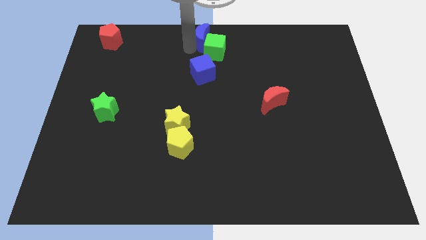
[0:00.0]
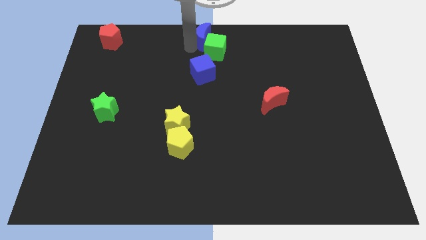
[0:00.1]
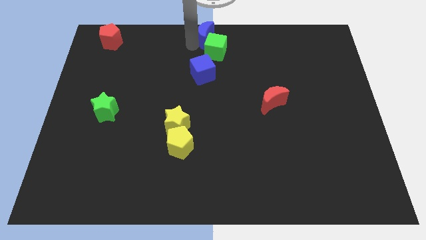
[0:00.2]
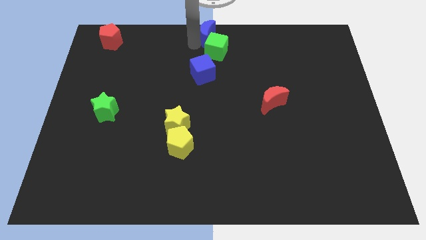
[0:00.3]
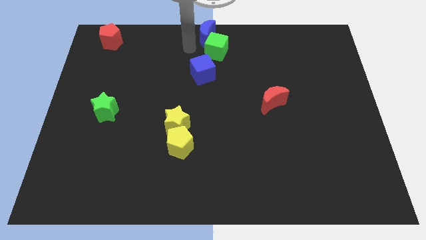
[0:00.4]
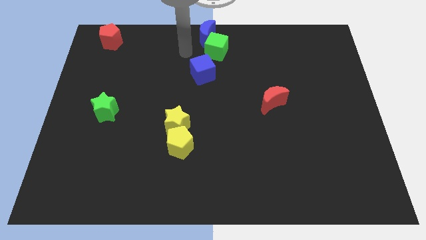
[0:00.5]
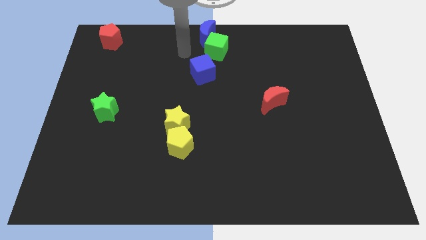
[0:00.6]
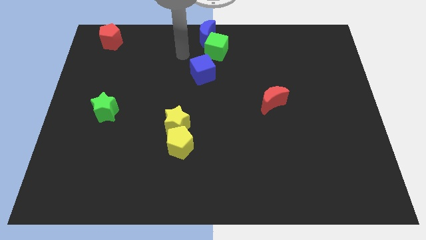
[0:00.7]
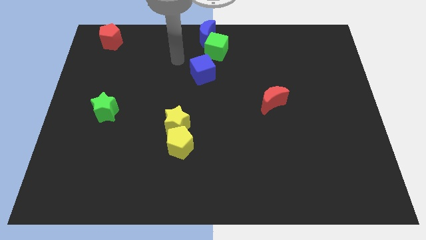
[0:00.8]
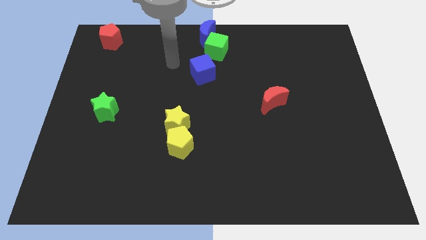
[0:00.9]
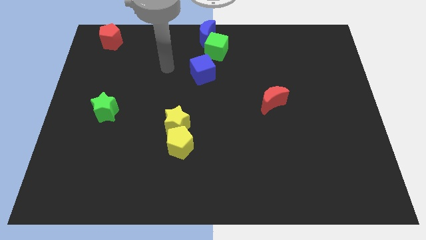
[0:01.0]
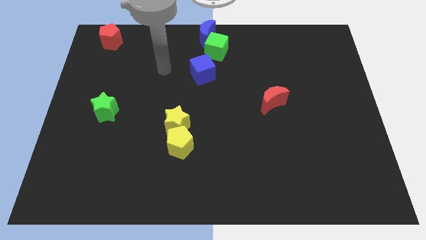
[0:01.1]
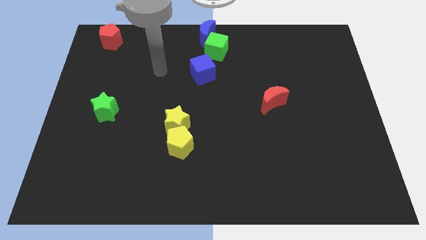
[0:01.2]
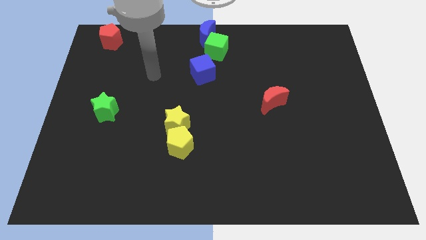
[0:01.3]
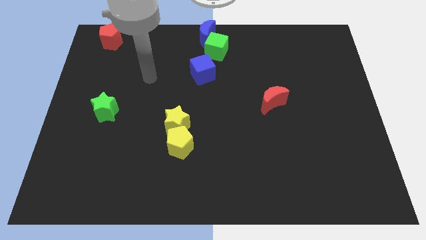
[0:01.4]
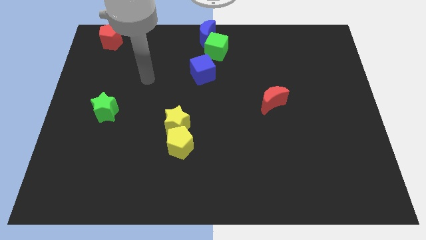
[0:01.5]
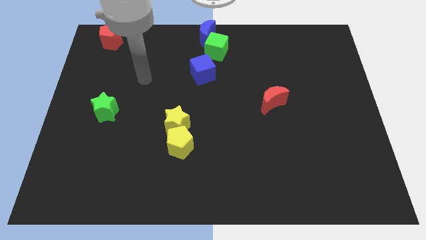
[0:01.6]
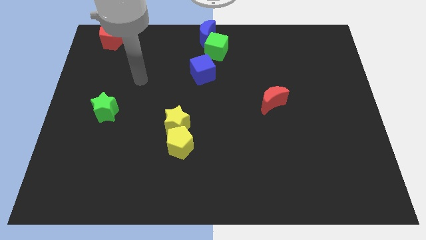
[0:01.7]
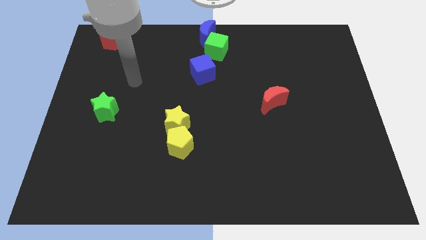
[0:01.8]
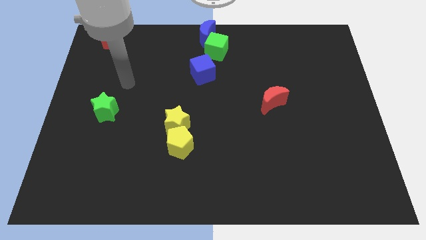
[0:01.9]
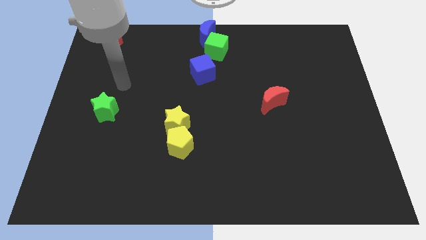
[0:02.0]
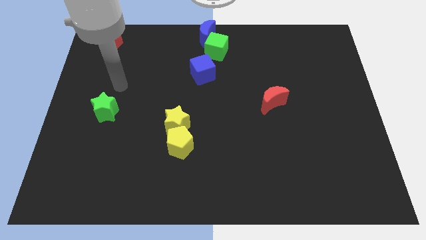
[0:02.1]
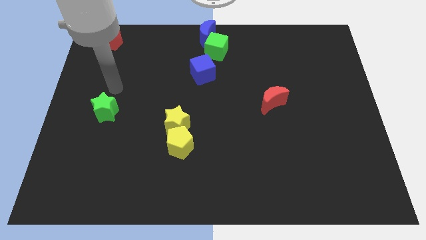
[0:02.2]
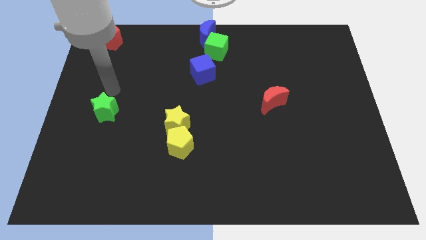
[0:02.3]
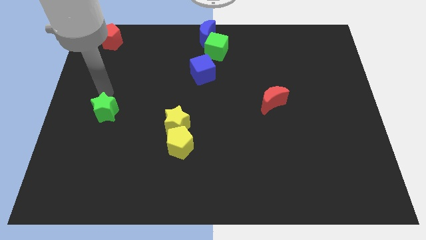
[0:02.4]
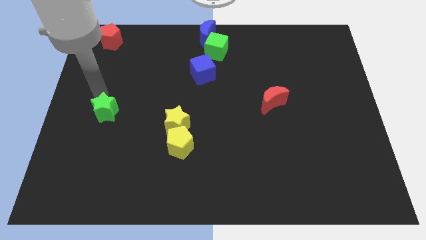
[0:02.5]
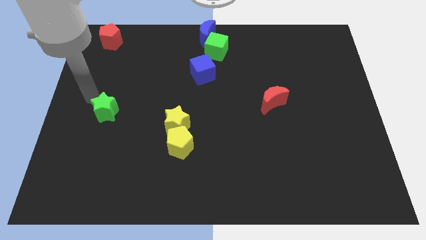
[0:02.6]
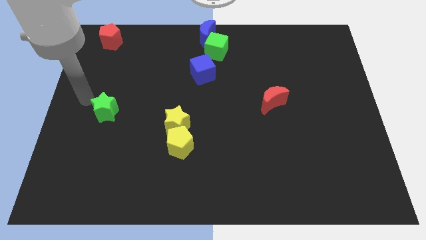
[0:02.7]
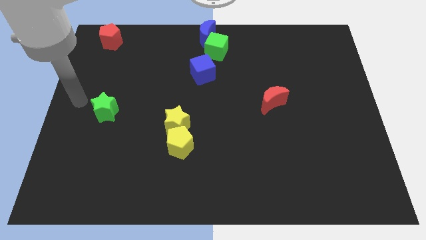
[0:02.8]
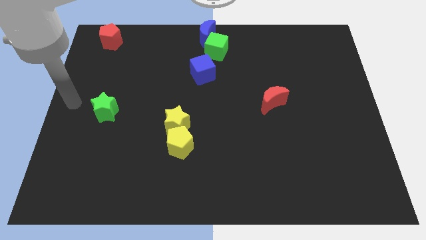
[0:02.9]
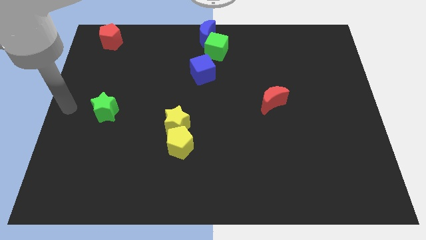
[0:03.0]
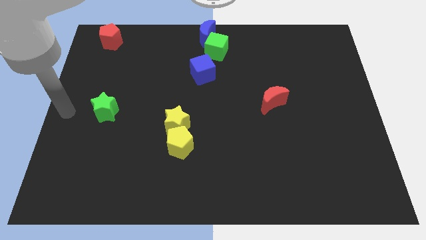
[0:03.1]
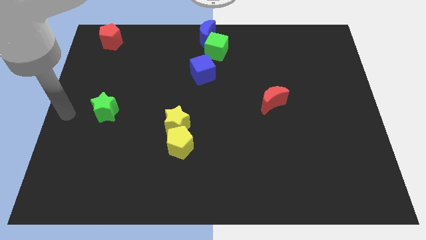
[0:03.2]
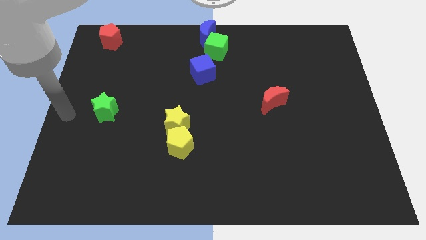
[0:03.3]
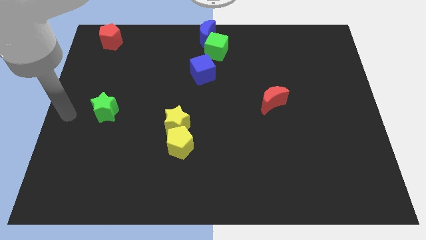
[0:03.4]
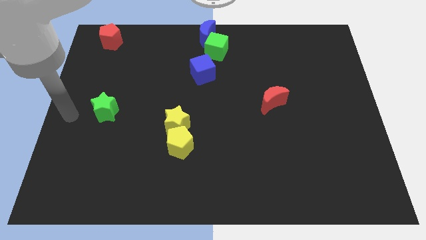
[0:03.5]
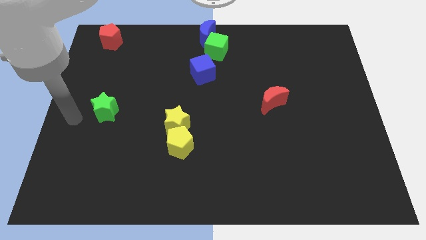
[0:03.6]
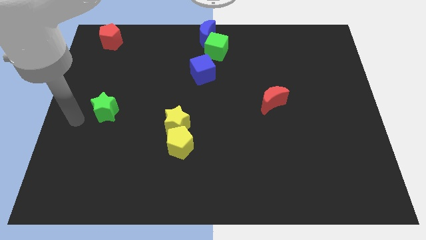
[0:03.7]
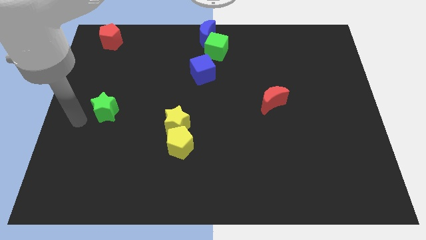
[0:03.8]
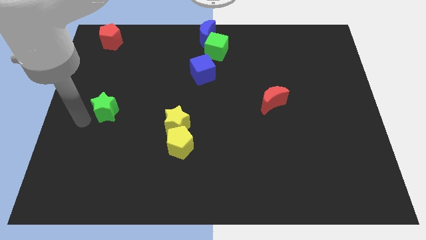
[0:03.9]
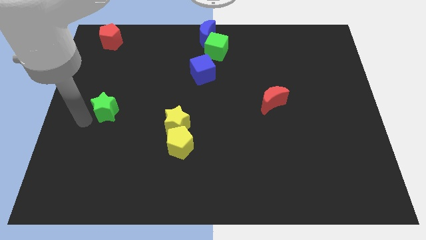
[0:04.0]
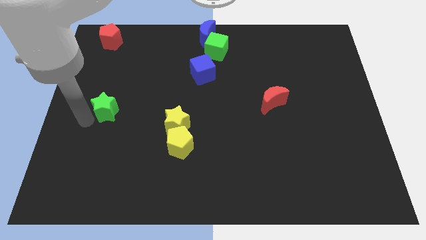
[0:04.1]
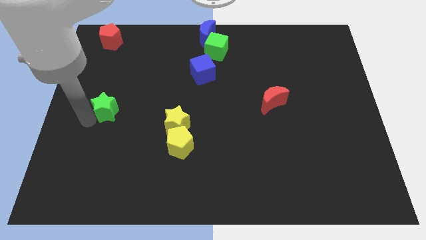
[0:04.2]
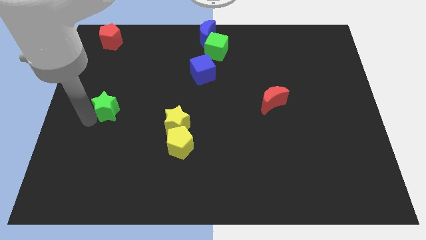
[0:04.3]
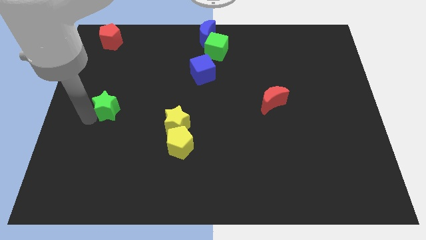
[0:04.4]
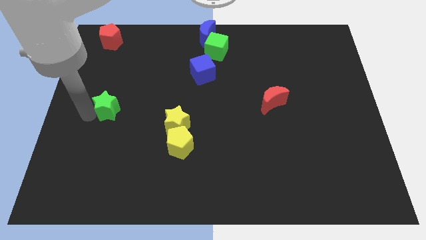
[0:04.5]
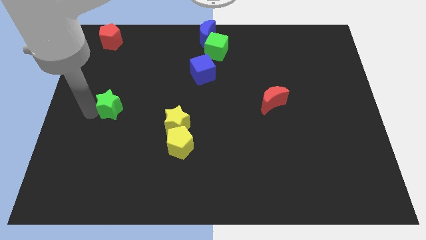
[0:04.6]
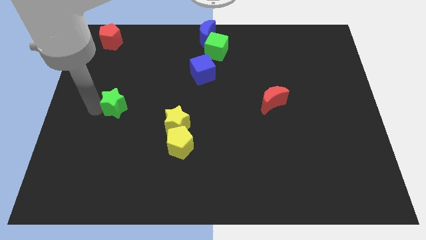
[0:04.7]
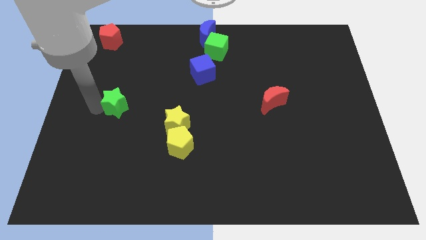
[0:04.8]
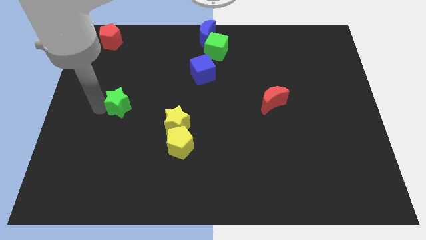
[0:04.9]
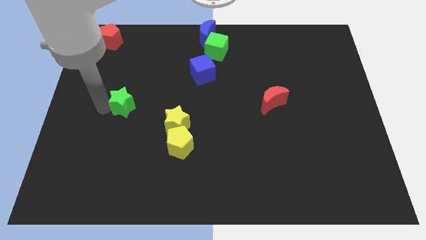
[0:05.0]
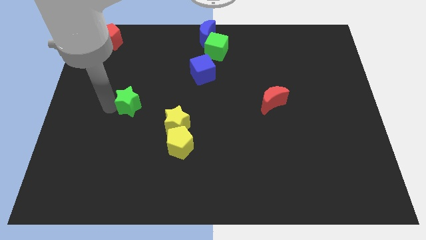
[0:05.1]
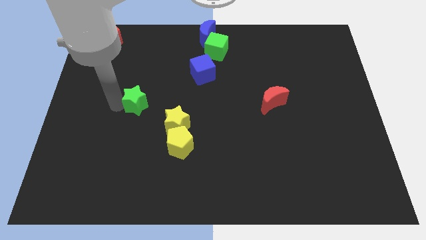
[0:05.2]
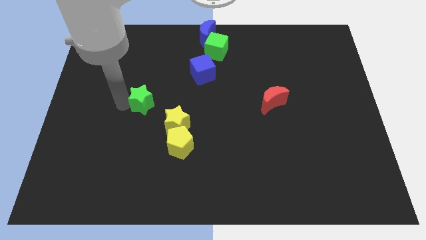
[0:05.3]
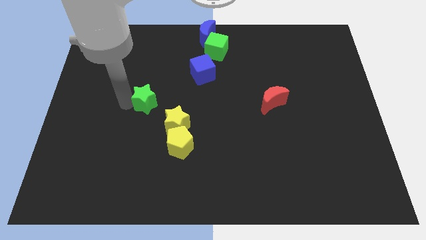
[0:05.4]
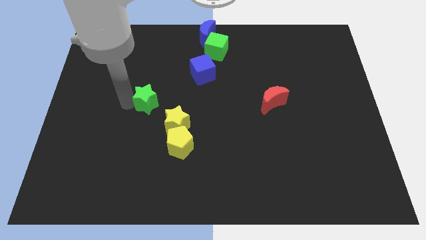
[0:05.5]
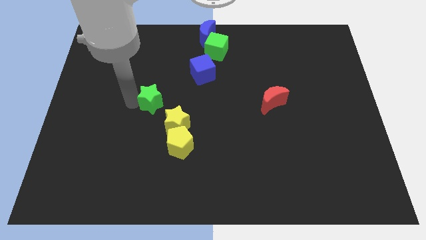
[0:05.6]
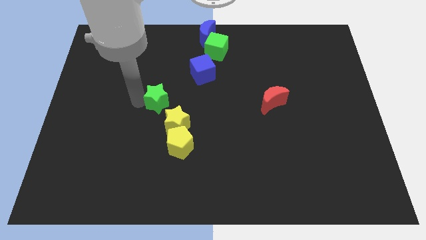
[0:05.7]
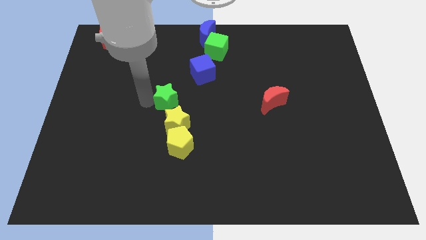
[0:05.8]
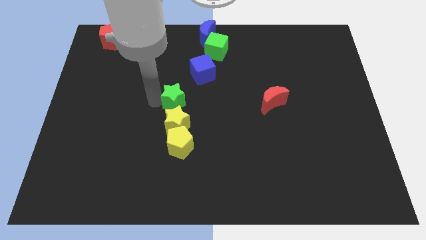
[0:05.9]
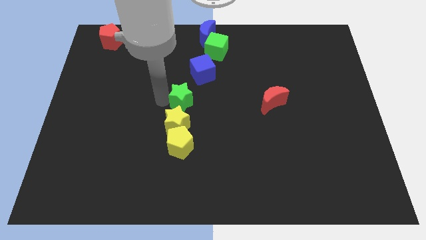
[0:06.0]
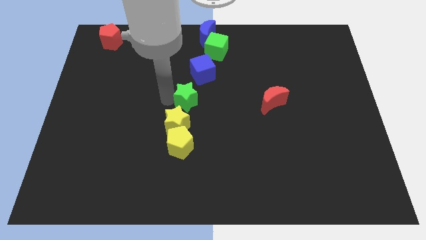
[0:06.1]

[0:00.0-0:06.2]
move the green star above the yellow star

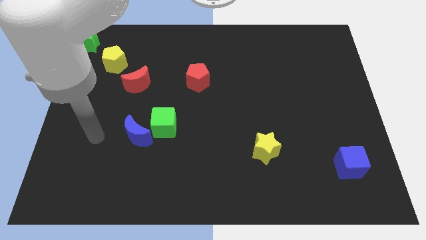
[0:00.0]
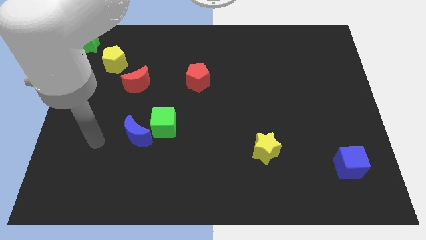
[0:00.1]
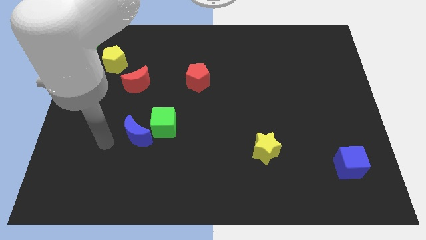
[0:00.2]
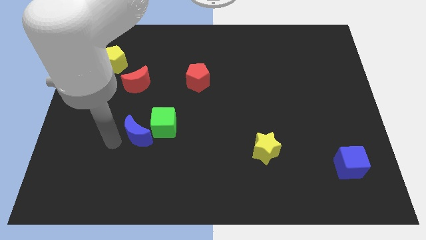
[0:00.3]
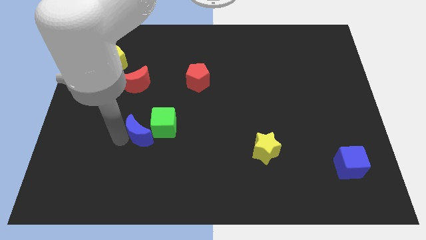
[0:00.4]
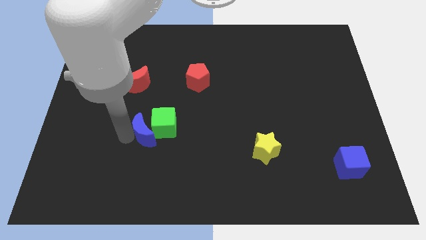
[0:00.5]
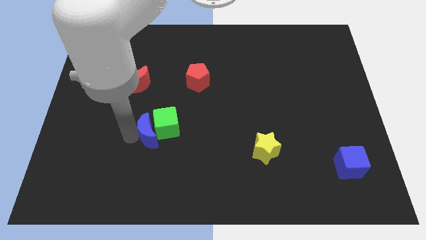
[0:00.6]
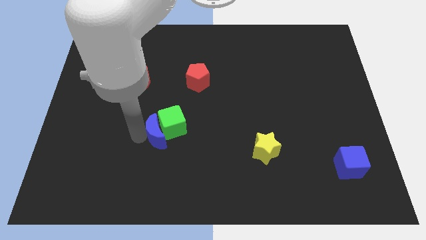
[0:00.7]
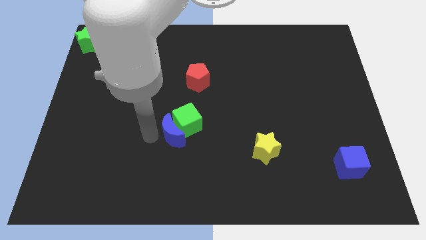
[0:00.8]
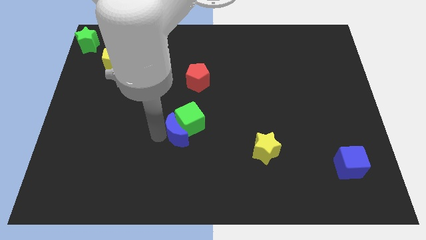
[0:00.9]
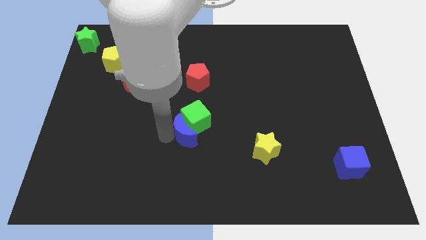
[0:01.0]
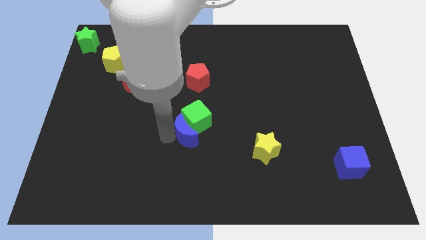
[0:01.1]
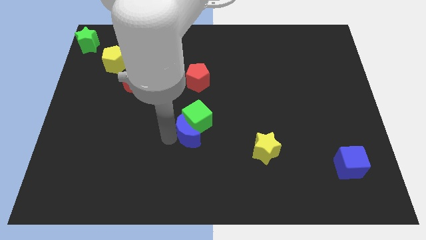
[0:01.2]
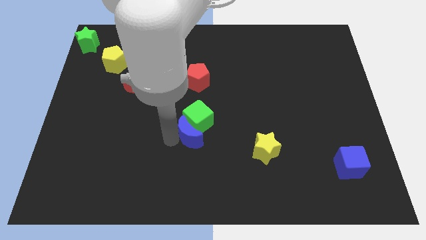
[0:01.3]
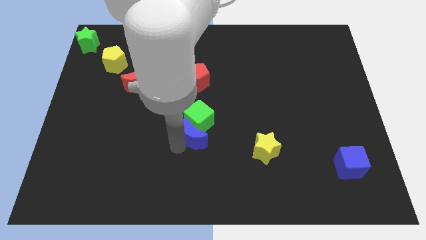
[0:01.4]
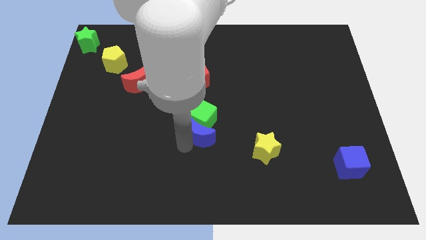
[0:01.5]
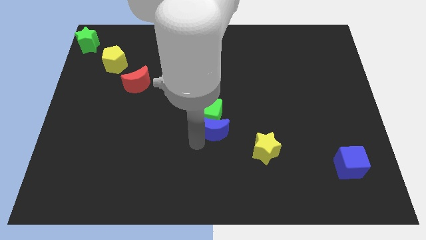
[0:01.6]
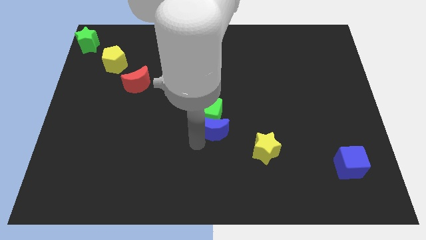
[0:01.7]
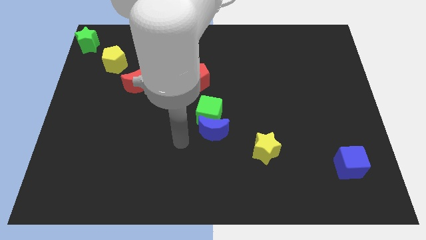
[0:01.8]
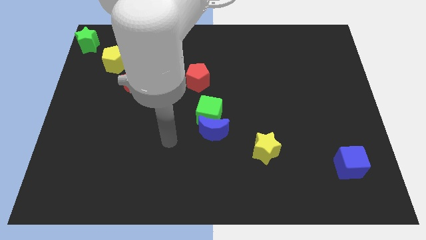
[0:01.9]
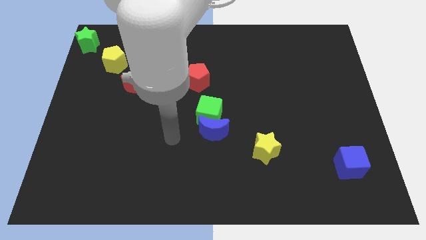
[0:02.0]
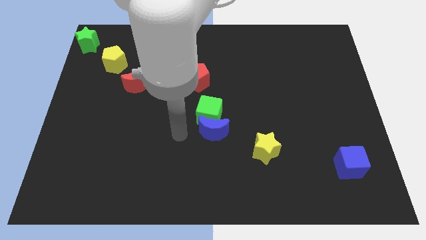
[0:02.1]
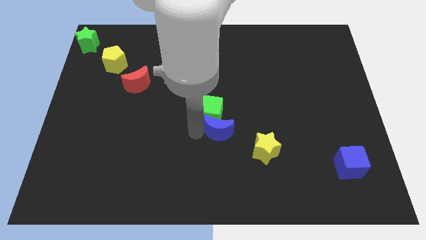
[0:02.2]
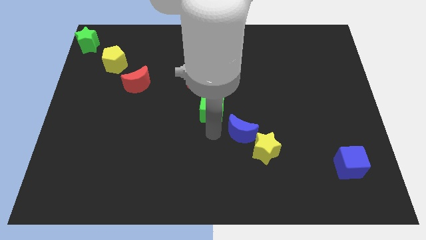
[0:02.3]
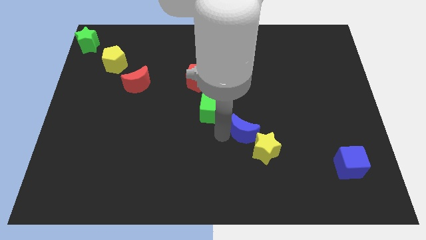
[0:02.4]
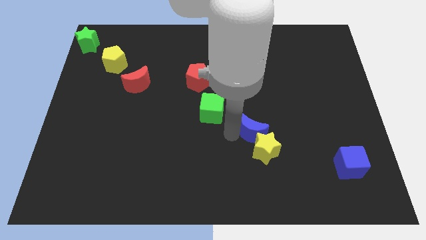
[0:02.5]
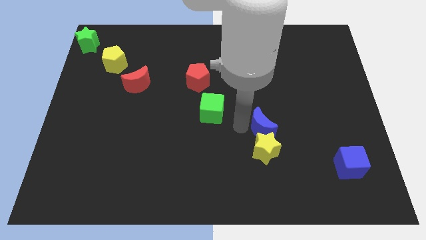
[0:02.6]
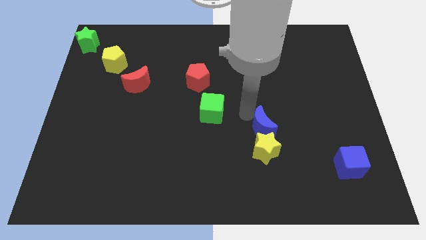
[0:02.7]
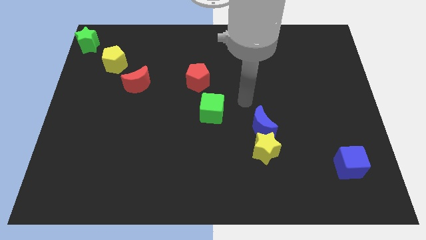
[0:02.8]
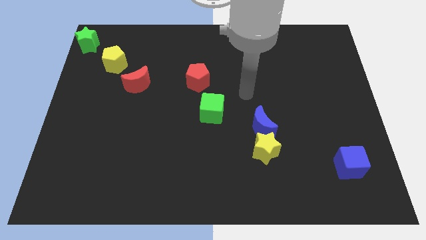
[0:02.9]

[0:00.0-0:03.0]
move blue moon away from green cube
